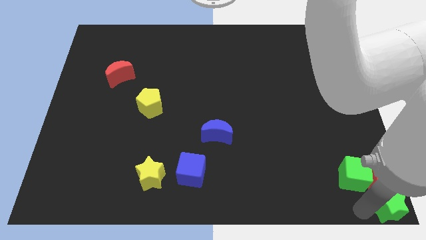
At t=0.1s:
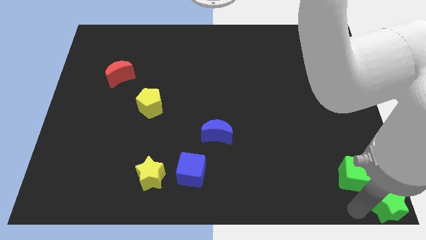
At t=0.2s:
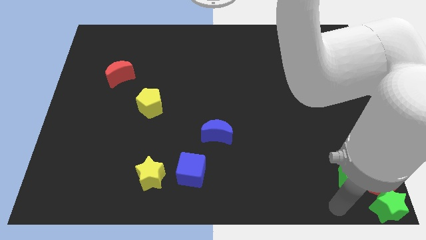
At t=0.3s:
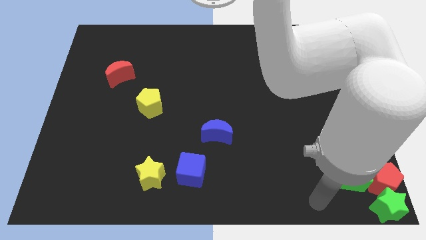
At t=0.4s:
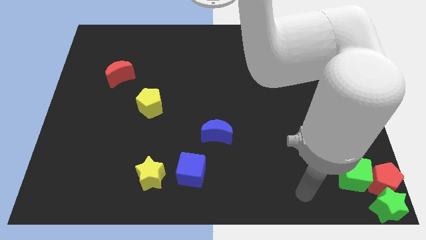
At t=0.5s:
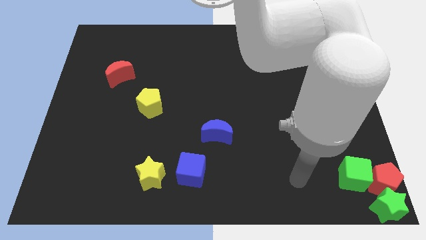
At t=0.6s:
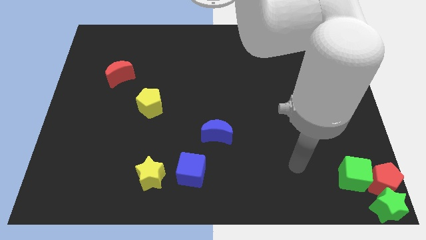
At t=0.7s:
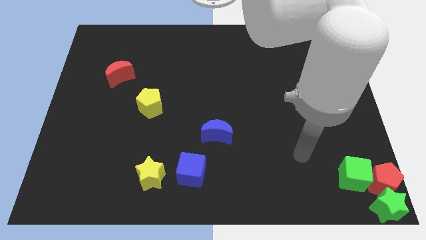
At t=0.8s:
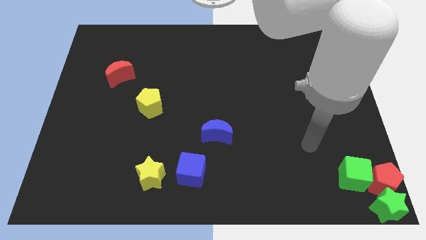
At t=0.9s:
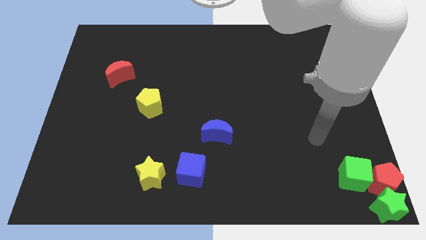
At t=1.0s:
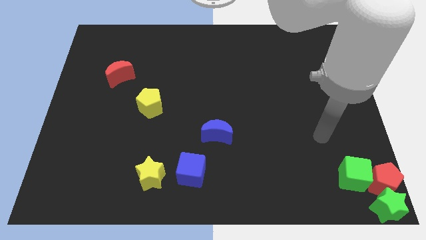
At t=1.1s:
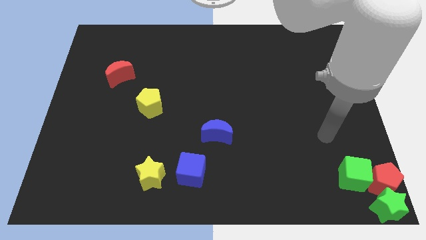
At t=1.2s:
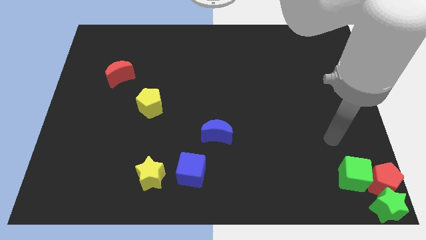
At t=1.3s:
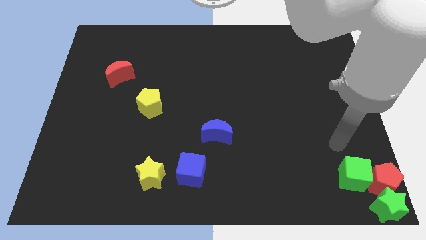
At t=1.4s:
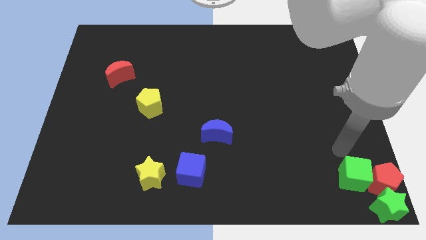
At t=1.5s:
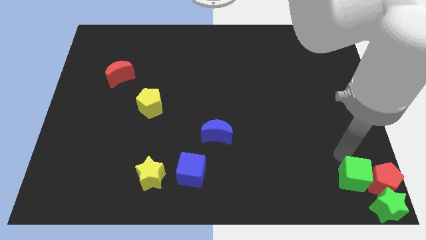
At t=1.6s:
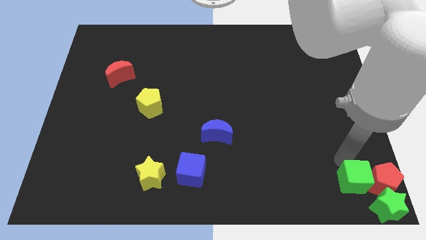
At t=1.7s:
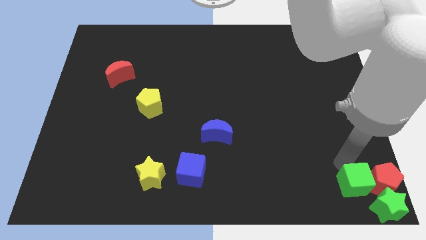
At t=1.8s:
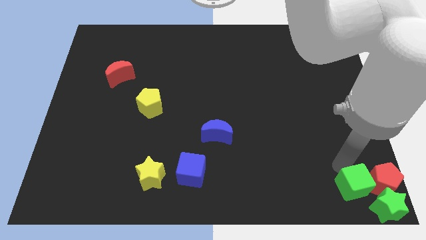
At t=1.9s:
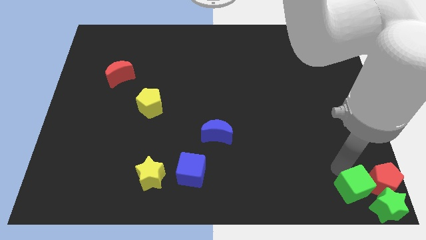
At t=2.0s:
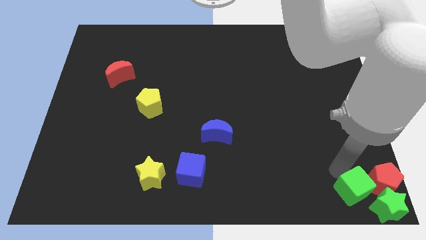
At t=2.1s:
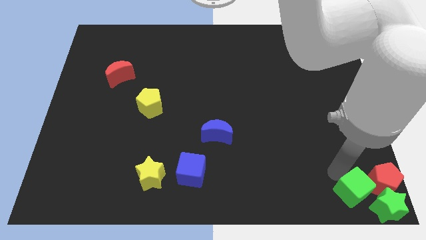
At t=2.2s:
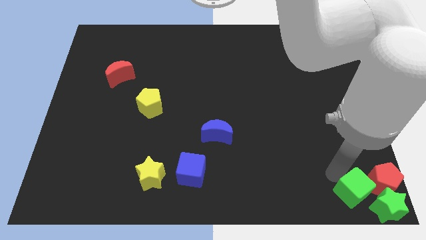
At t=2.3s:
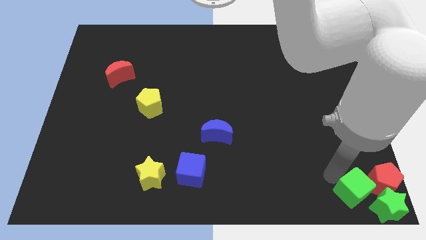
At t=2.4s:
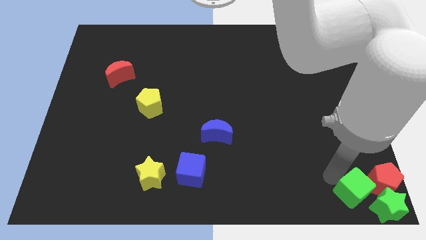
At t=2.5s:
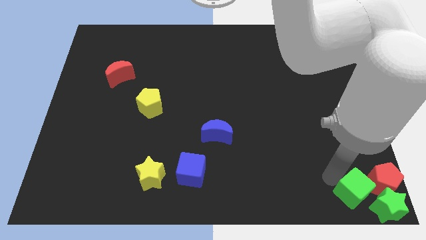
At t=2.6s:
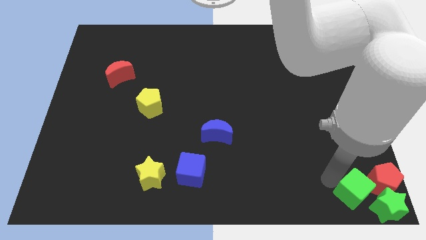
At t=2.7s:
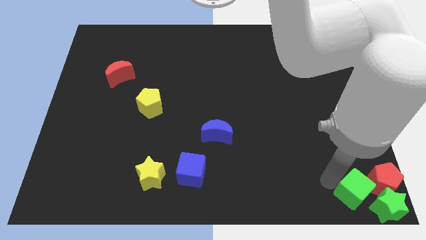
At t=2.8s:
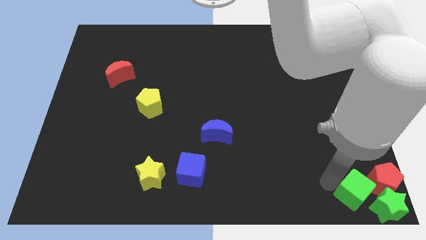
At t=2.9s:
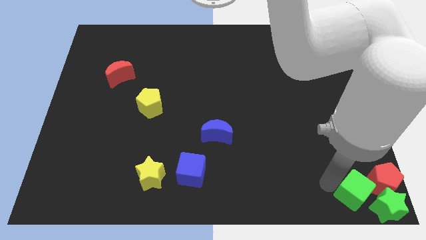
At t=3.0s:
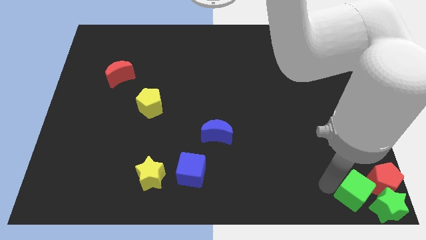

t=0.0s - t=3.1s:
place the green cube beside the green star

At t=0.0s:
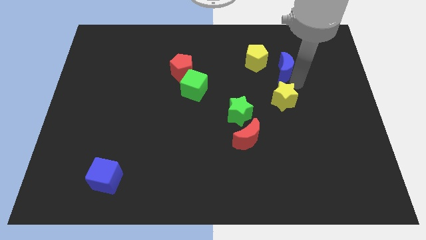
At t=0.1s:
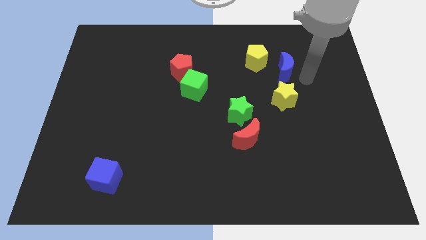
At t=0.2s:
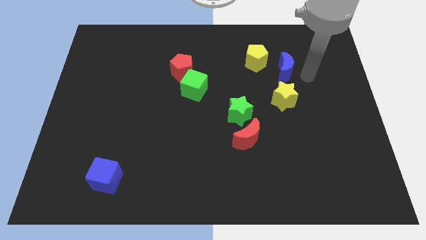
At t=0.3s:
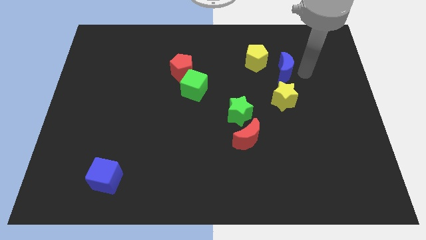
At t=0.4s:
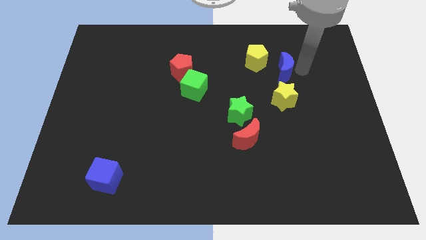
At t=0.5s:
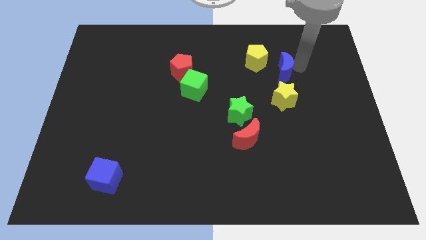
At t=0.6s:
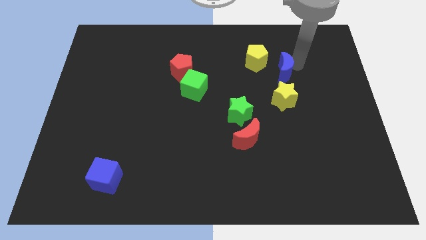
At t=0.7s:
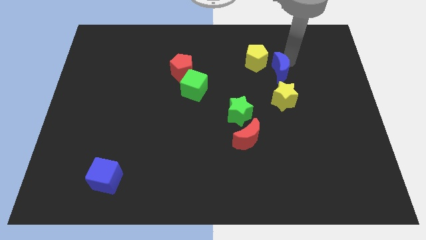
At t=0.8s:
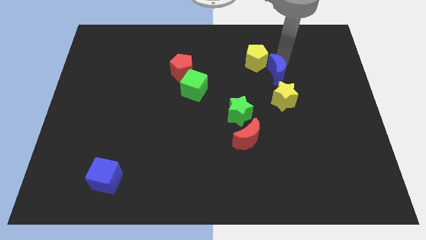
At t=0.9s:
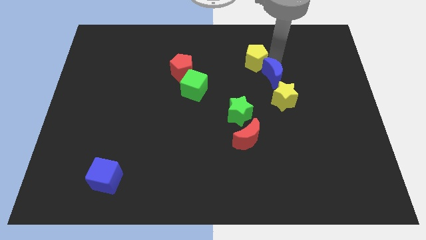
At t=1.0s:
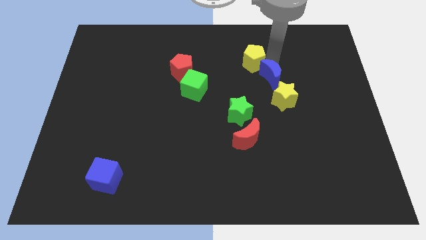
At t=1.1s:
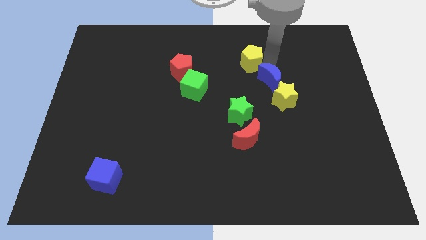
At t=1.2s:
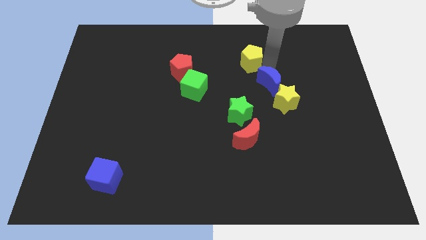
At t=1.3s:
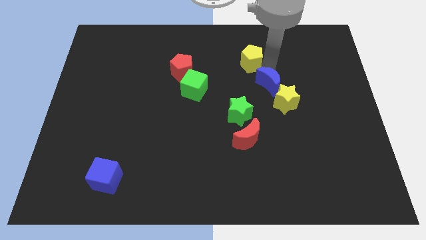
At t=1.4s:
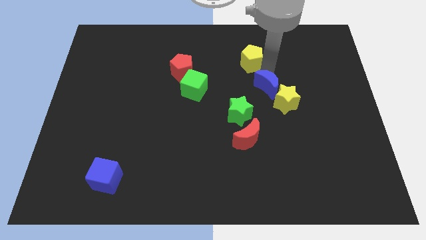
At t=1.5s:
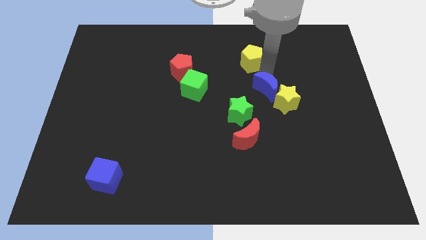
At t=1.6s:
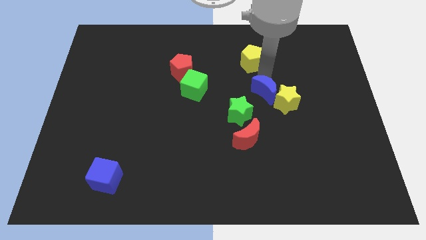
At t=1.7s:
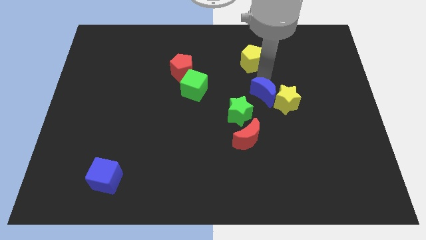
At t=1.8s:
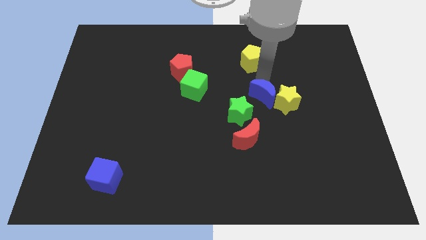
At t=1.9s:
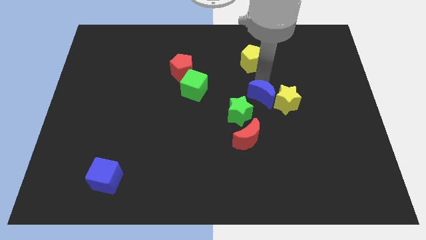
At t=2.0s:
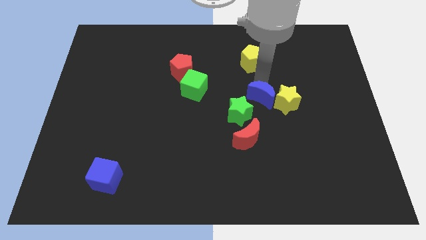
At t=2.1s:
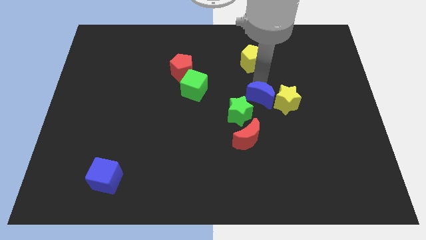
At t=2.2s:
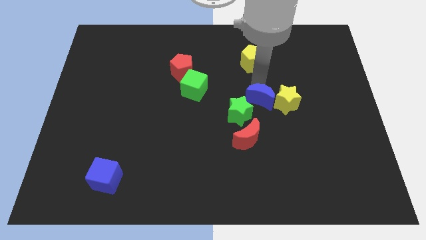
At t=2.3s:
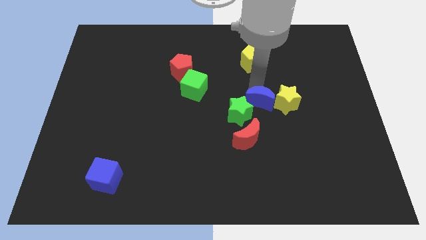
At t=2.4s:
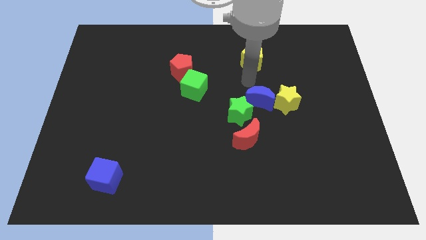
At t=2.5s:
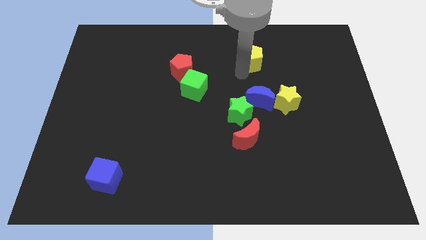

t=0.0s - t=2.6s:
place the blue moon left to the yellow star

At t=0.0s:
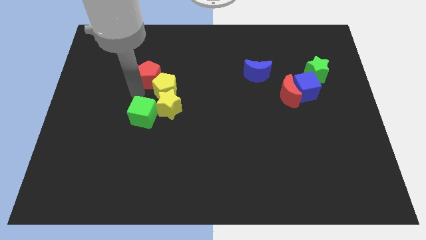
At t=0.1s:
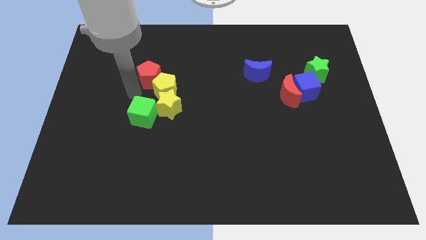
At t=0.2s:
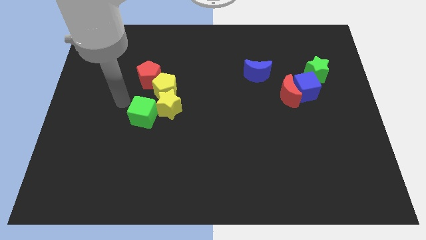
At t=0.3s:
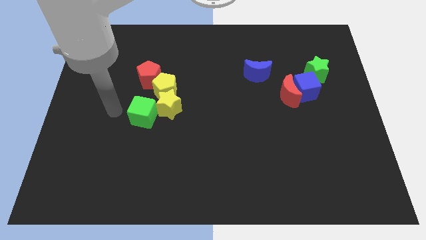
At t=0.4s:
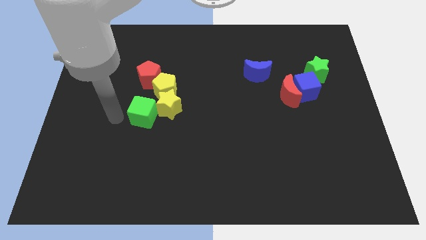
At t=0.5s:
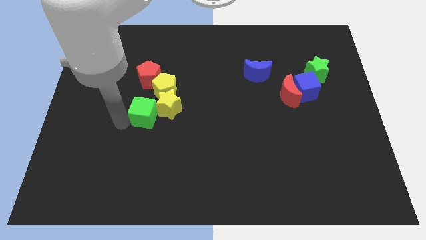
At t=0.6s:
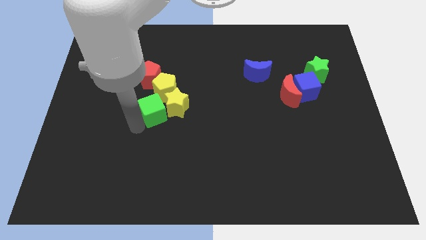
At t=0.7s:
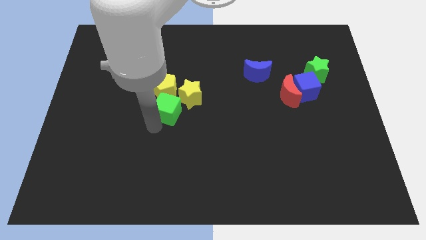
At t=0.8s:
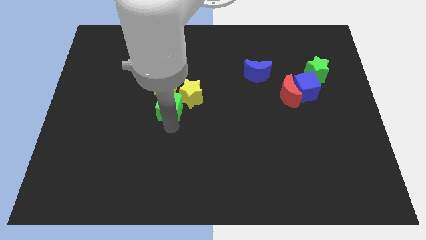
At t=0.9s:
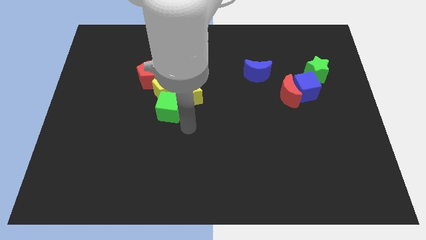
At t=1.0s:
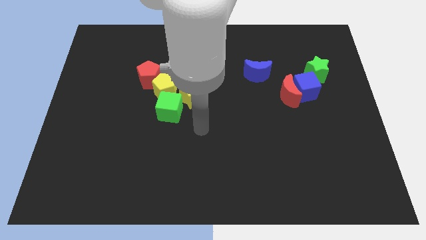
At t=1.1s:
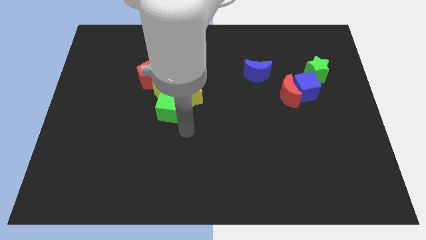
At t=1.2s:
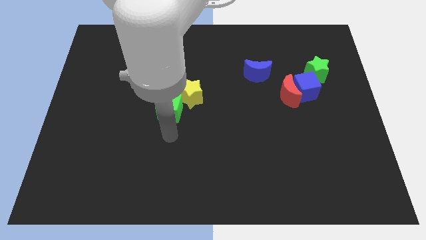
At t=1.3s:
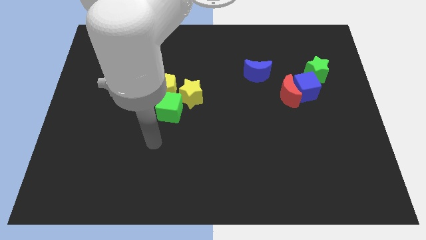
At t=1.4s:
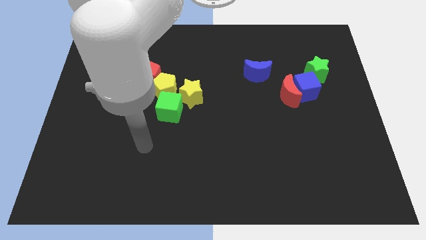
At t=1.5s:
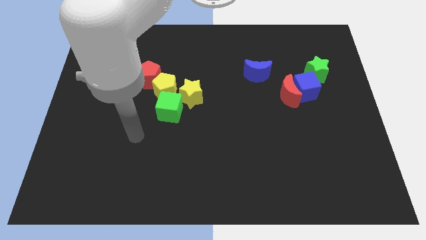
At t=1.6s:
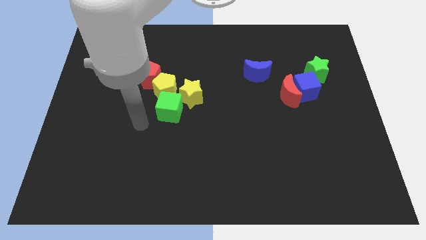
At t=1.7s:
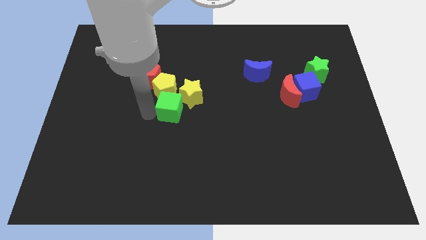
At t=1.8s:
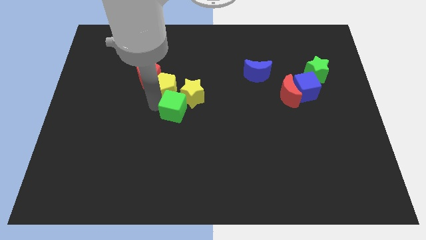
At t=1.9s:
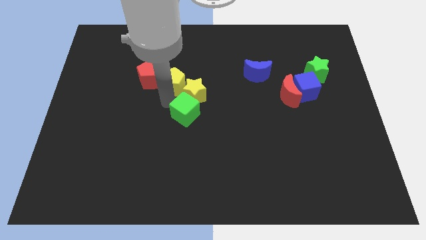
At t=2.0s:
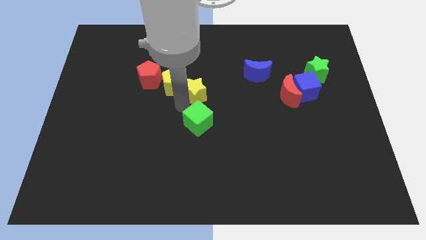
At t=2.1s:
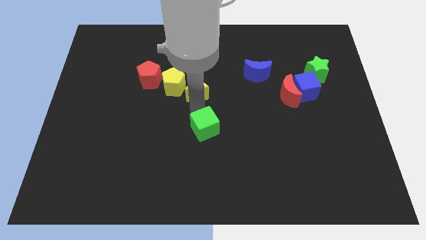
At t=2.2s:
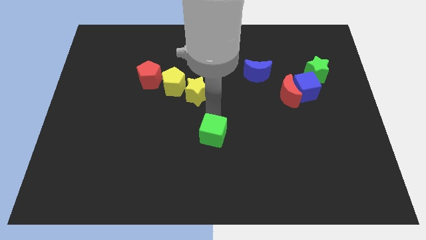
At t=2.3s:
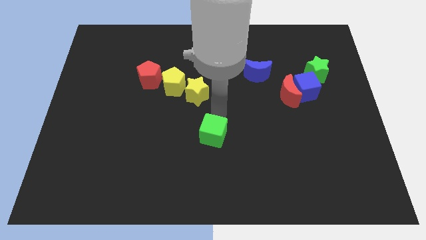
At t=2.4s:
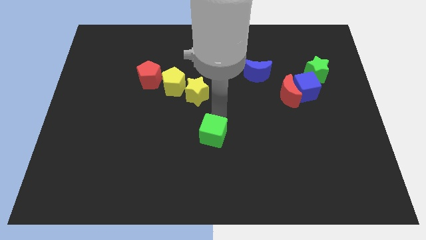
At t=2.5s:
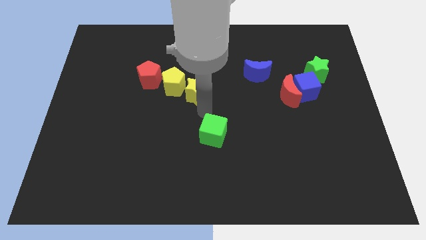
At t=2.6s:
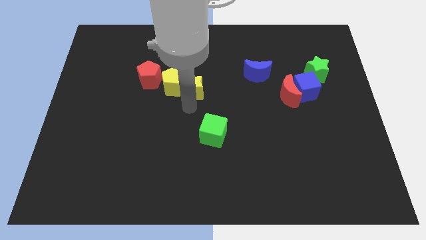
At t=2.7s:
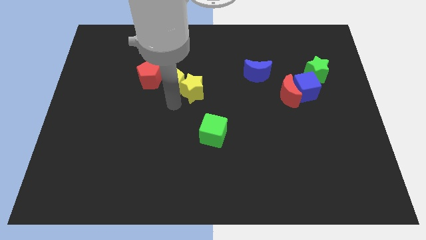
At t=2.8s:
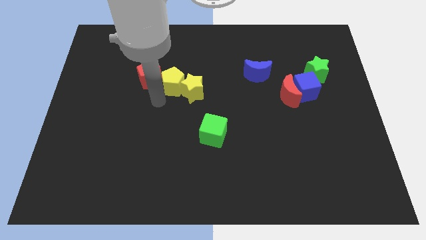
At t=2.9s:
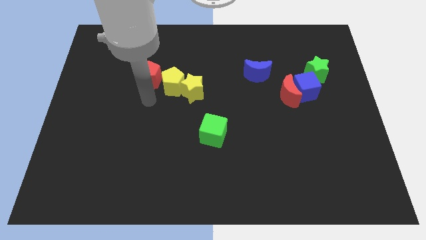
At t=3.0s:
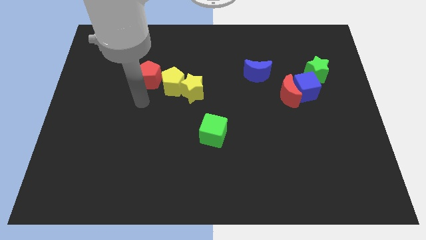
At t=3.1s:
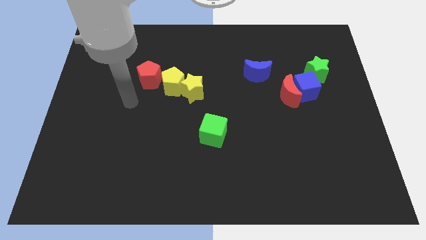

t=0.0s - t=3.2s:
place the green cube below the yellow star
